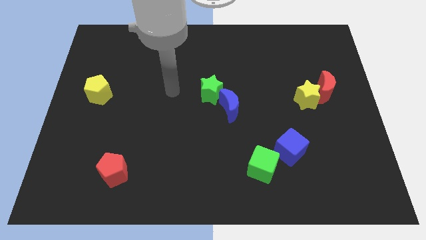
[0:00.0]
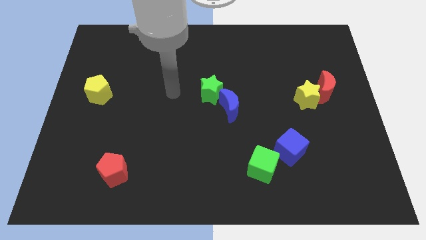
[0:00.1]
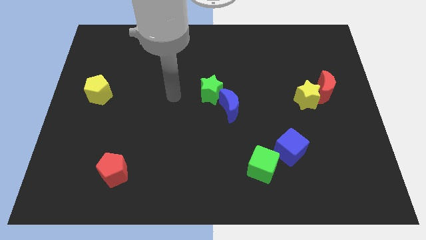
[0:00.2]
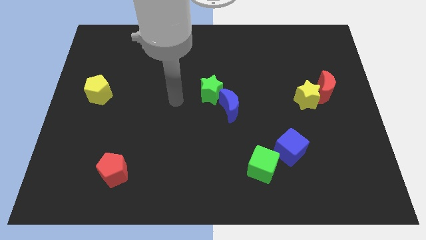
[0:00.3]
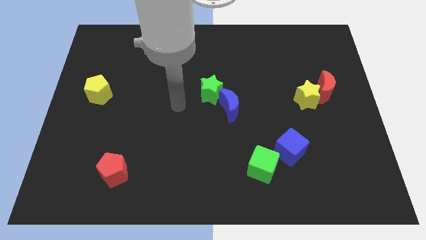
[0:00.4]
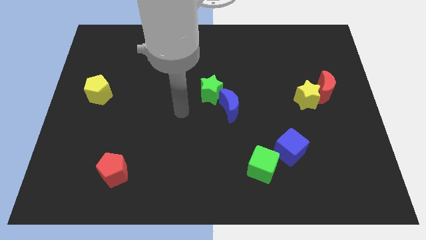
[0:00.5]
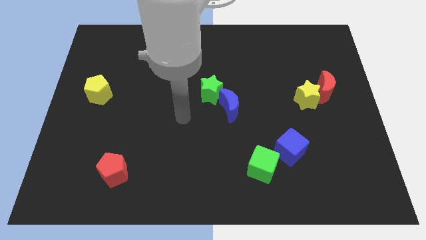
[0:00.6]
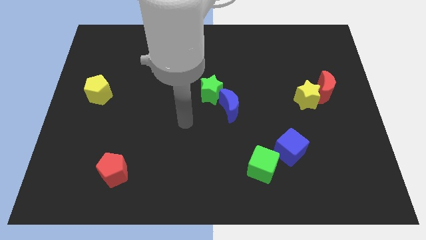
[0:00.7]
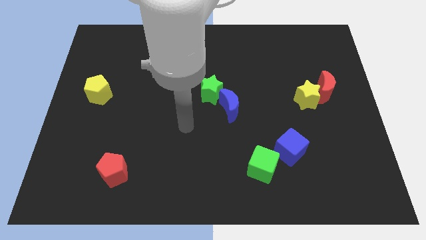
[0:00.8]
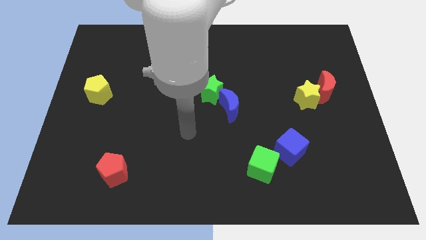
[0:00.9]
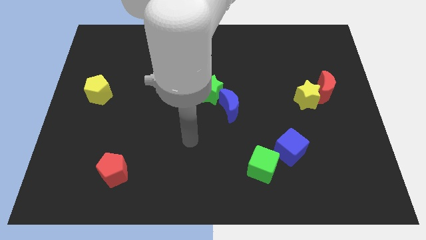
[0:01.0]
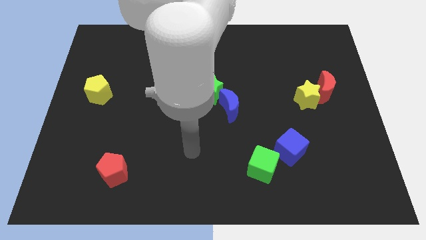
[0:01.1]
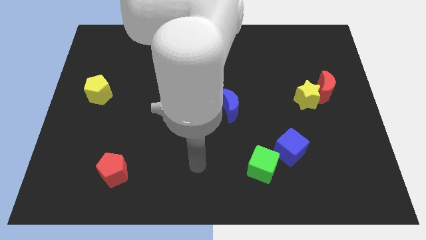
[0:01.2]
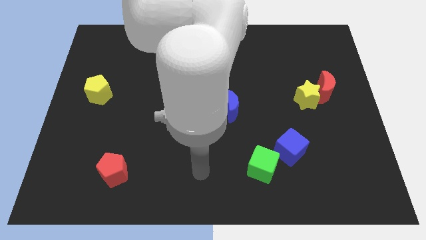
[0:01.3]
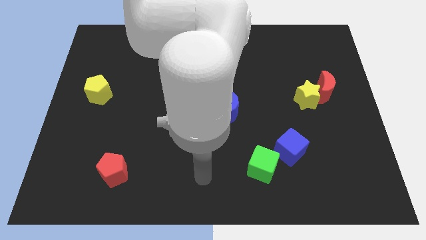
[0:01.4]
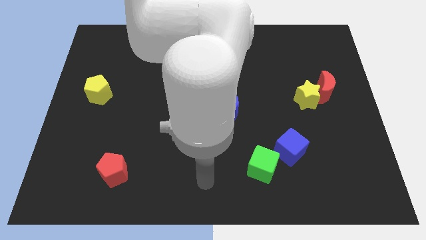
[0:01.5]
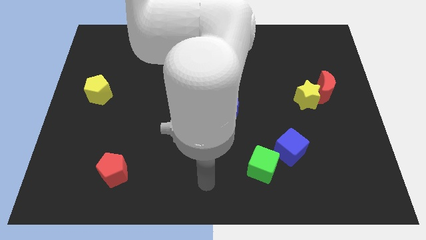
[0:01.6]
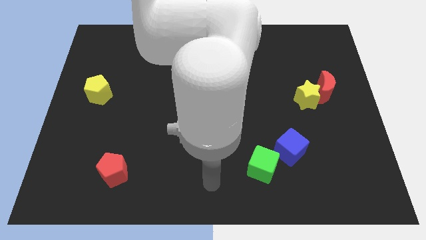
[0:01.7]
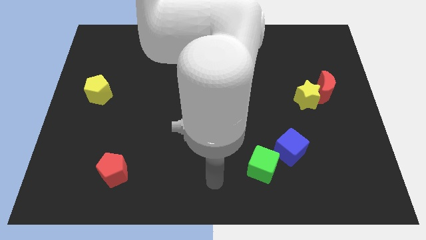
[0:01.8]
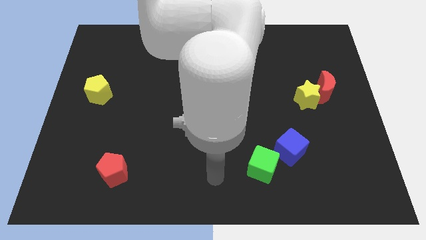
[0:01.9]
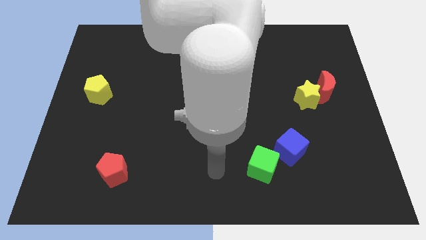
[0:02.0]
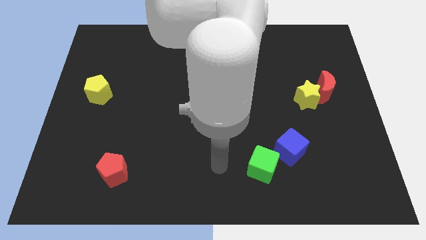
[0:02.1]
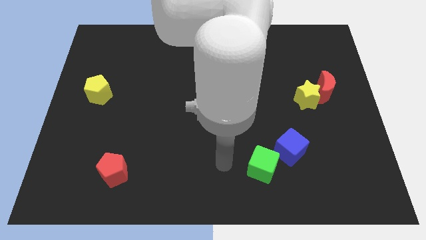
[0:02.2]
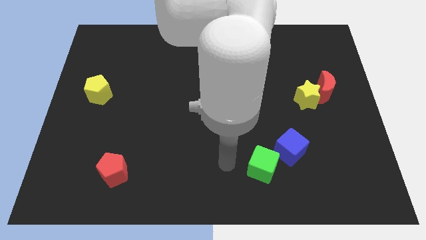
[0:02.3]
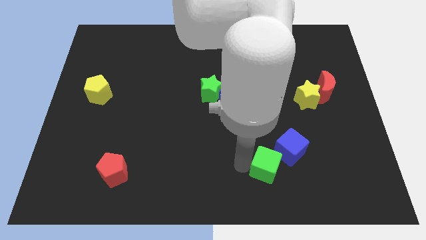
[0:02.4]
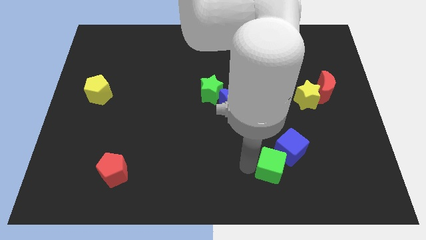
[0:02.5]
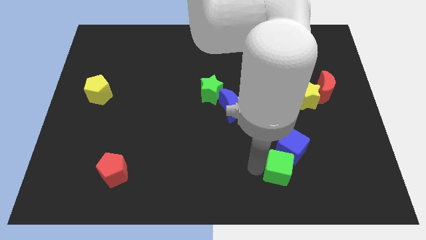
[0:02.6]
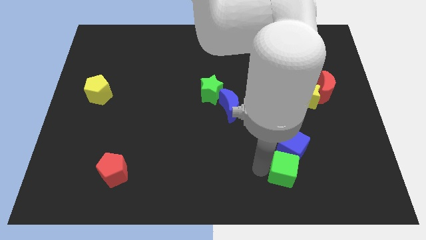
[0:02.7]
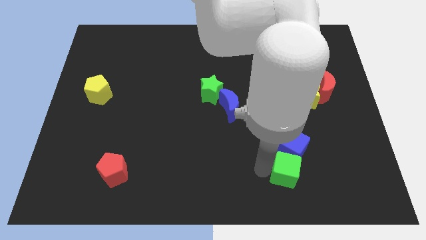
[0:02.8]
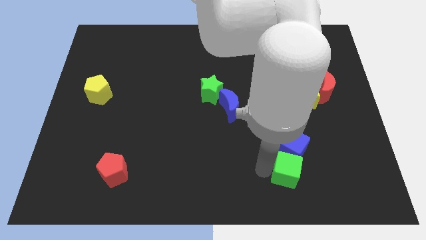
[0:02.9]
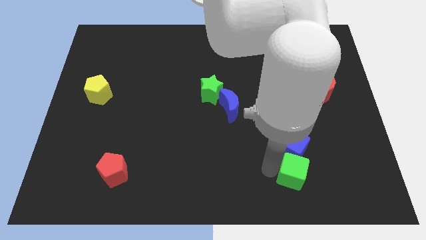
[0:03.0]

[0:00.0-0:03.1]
slide green cube to the right

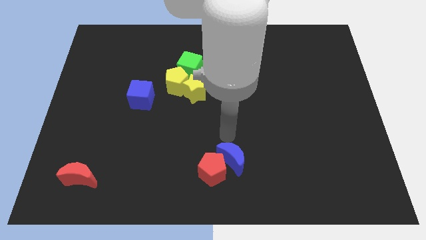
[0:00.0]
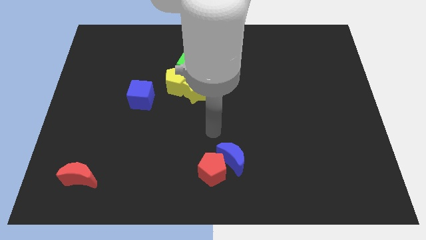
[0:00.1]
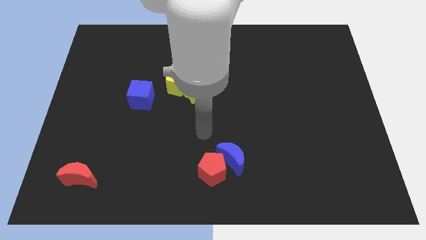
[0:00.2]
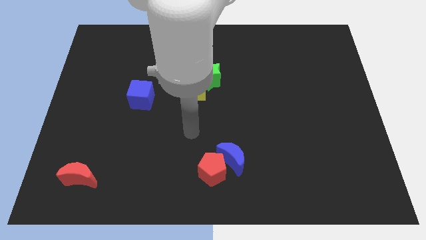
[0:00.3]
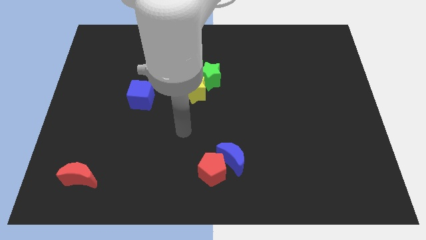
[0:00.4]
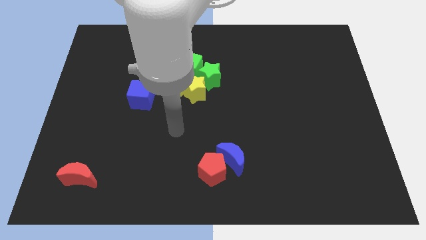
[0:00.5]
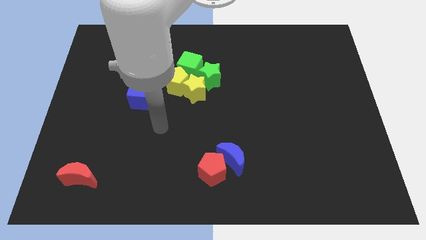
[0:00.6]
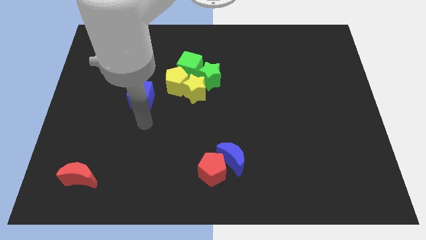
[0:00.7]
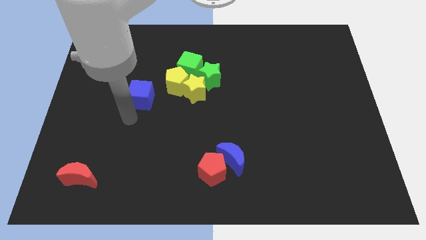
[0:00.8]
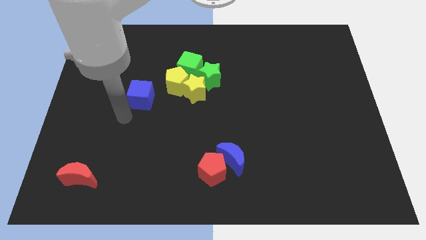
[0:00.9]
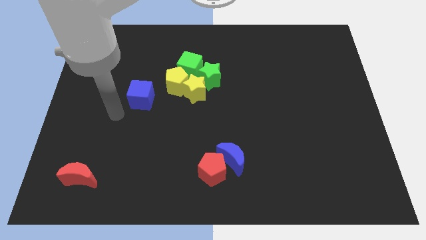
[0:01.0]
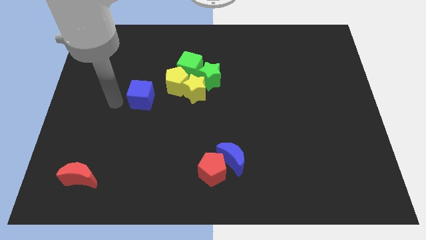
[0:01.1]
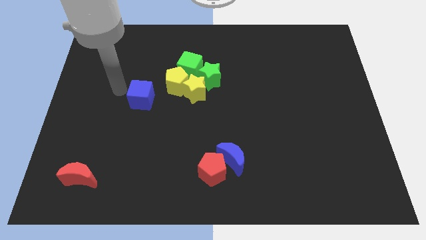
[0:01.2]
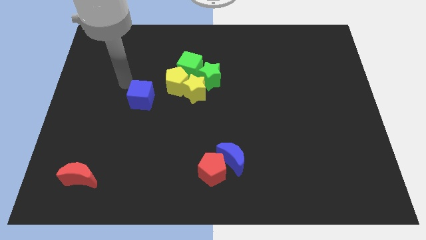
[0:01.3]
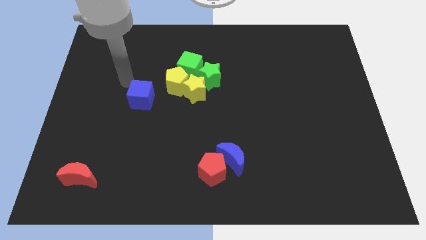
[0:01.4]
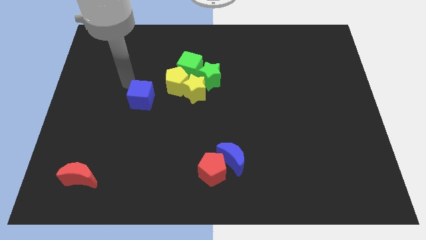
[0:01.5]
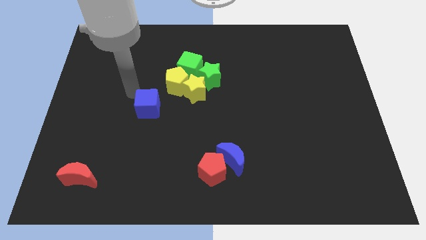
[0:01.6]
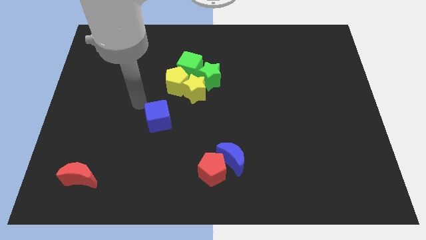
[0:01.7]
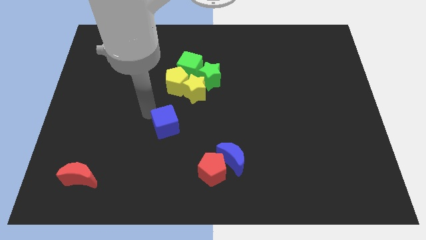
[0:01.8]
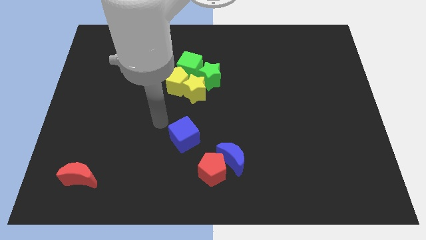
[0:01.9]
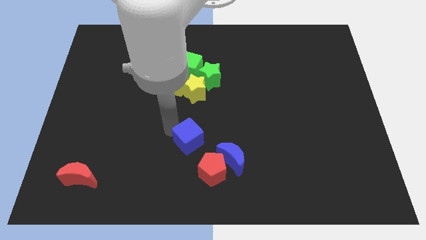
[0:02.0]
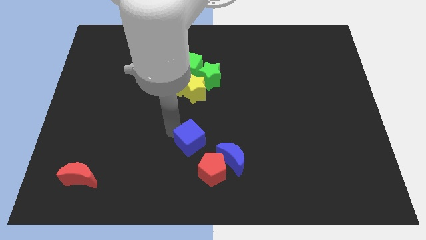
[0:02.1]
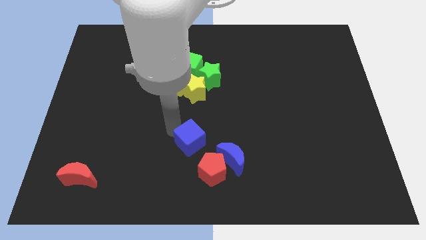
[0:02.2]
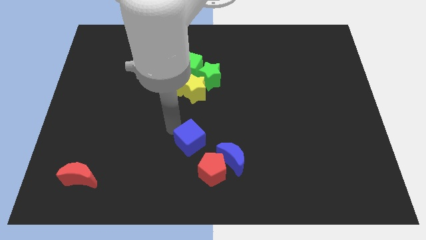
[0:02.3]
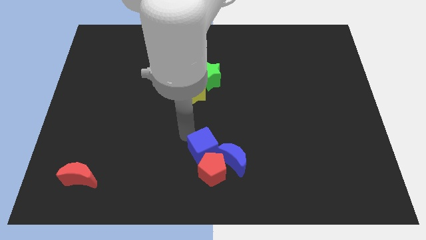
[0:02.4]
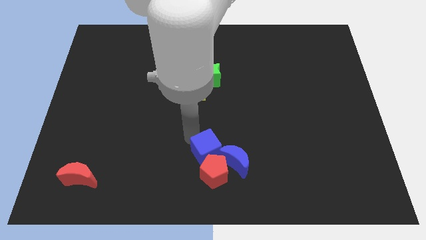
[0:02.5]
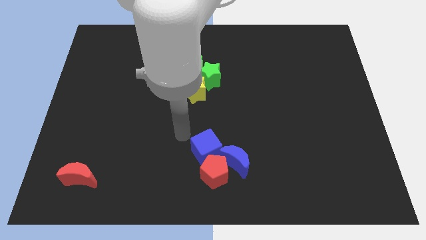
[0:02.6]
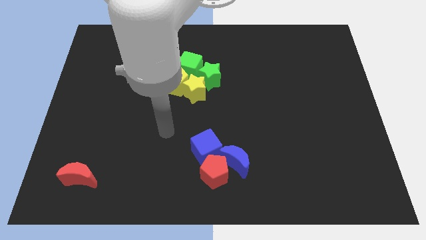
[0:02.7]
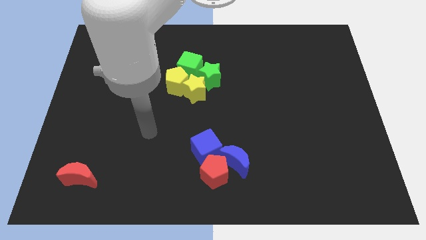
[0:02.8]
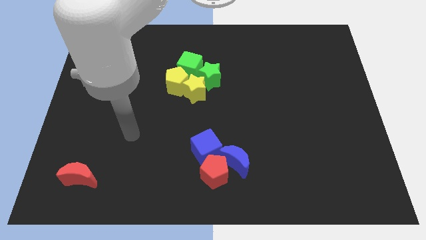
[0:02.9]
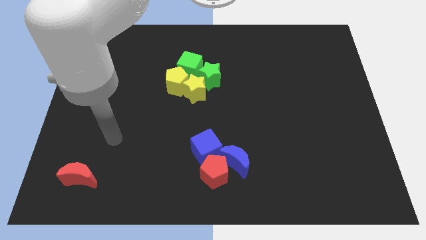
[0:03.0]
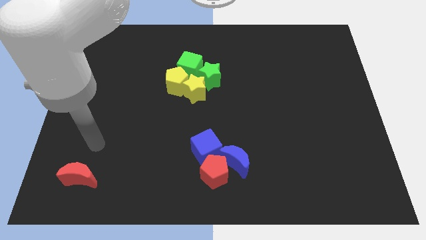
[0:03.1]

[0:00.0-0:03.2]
move blue cube above red pentagon

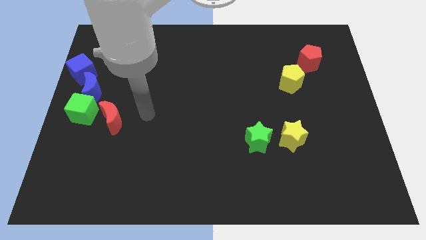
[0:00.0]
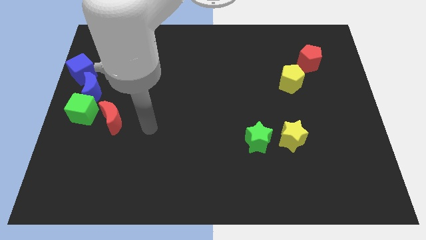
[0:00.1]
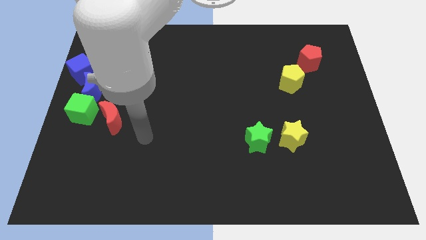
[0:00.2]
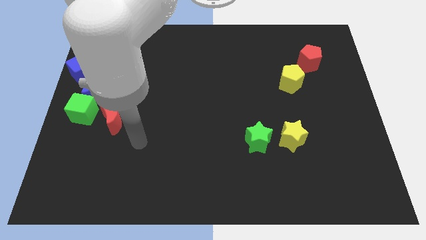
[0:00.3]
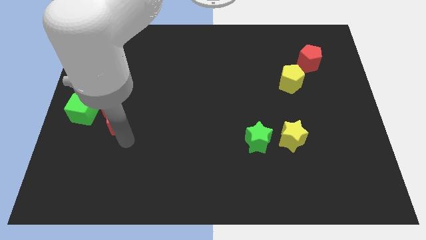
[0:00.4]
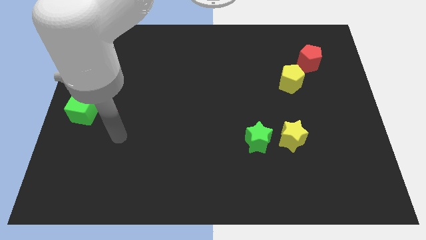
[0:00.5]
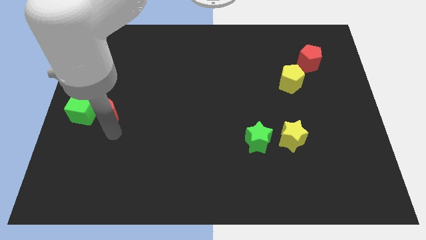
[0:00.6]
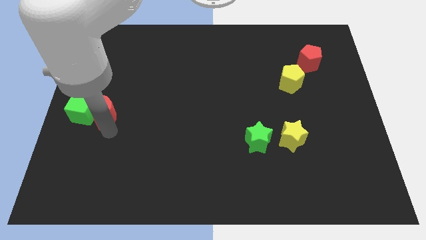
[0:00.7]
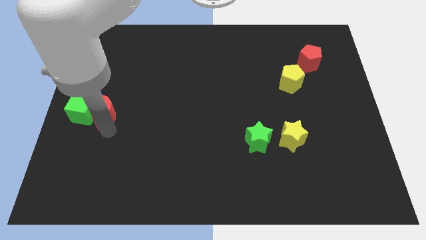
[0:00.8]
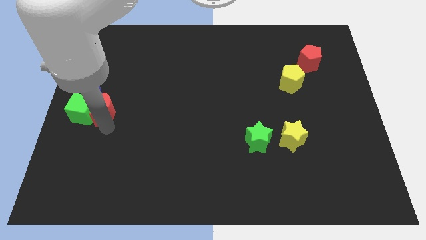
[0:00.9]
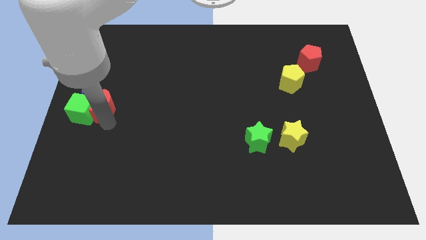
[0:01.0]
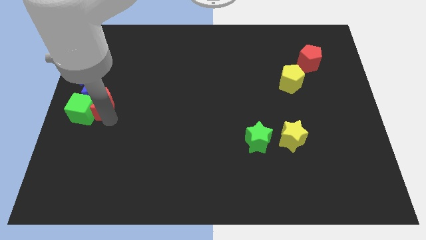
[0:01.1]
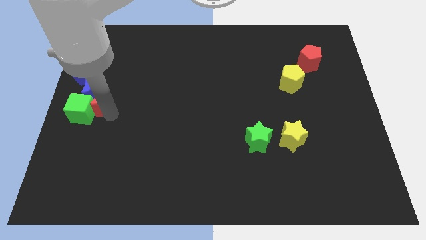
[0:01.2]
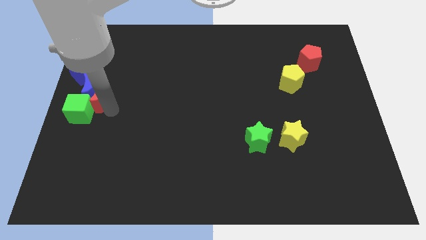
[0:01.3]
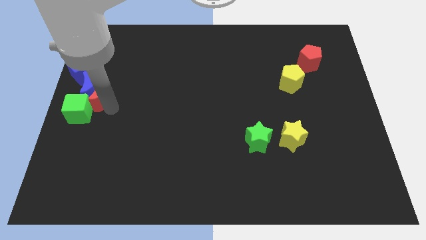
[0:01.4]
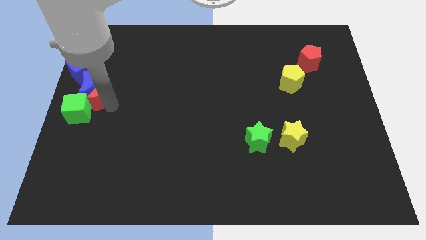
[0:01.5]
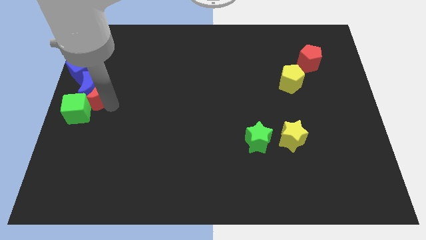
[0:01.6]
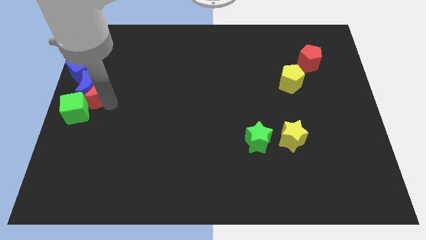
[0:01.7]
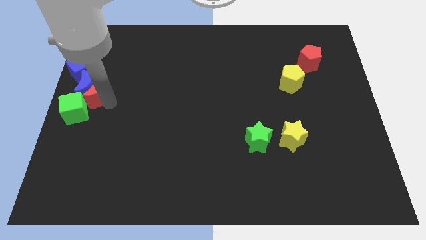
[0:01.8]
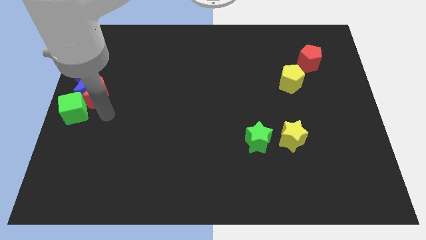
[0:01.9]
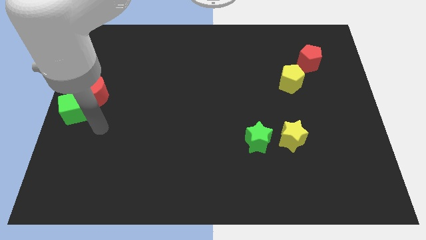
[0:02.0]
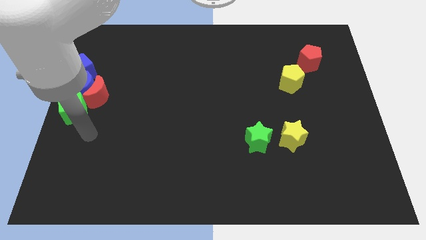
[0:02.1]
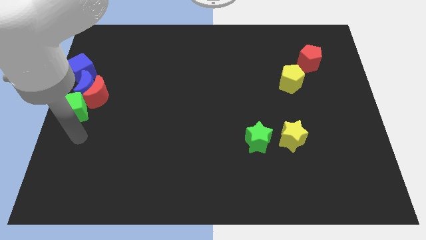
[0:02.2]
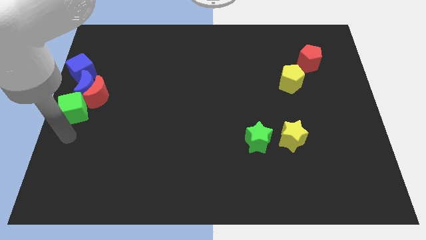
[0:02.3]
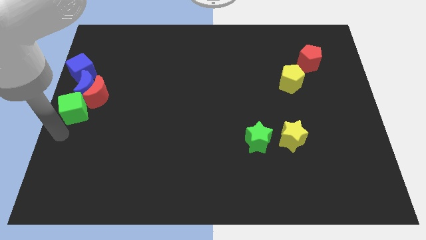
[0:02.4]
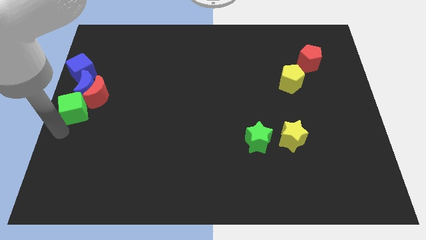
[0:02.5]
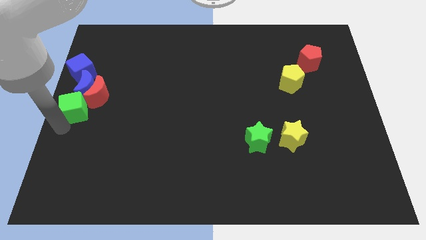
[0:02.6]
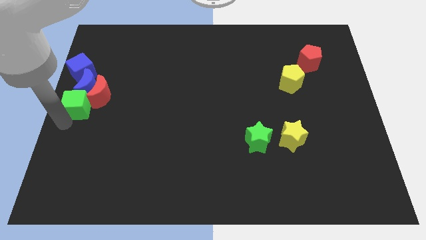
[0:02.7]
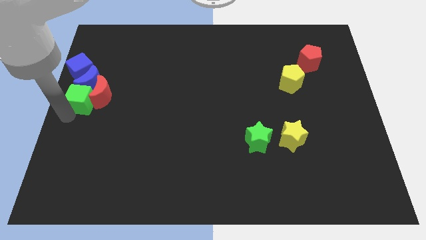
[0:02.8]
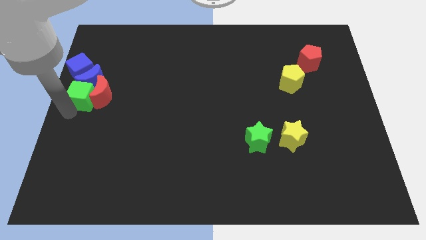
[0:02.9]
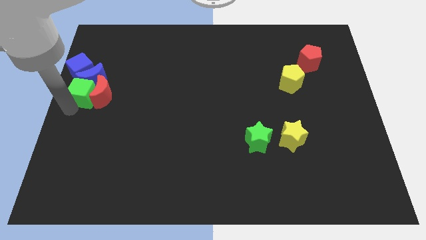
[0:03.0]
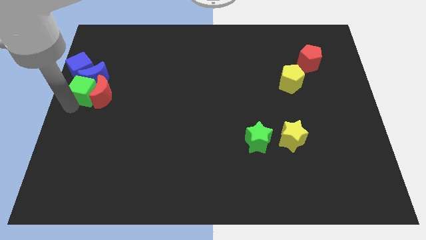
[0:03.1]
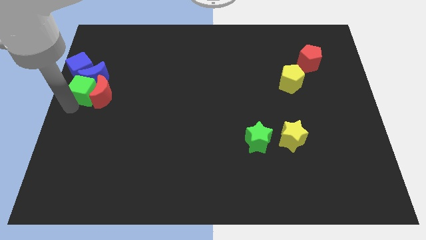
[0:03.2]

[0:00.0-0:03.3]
push red crescent and green cube into the both blue blocks
